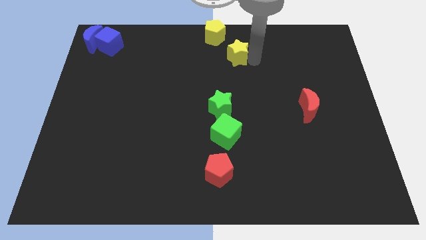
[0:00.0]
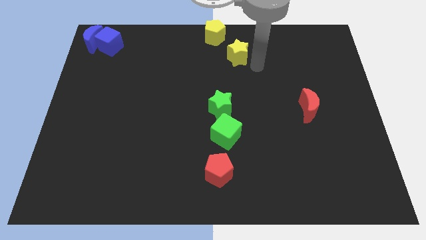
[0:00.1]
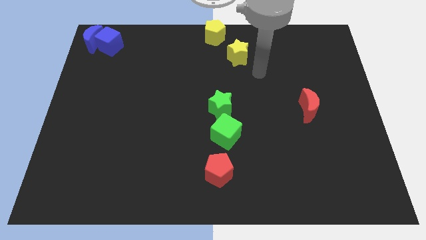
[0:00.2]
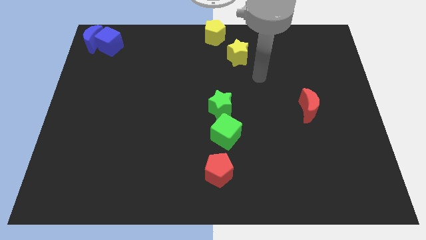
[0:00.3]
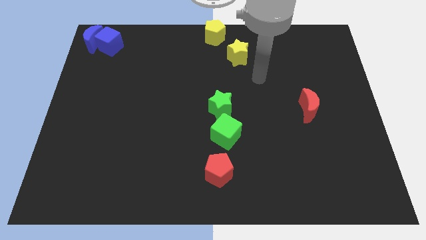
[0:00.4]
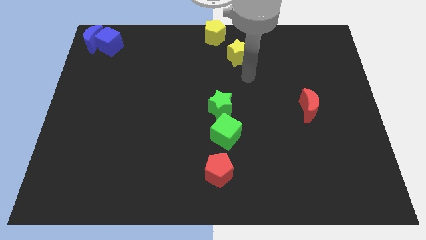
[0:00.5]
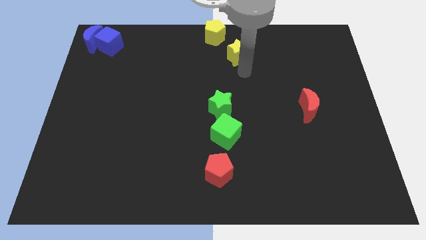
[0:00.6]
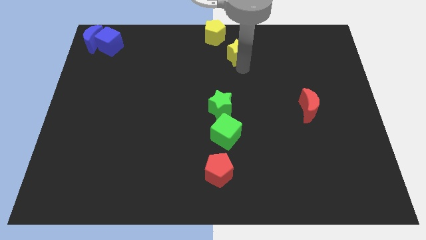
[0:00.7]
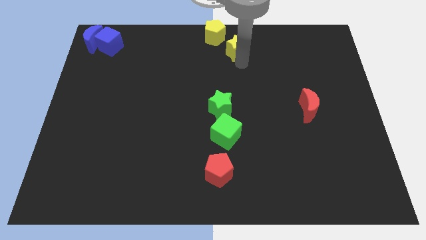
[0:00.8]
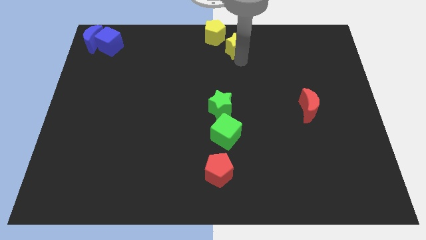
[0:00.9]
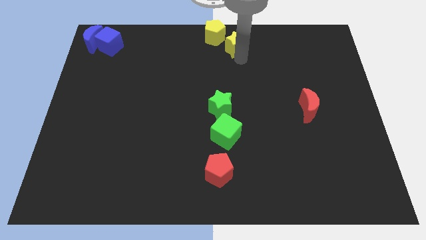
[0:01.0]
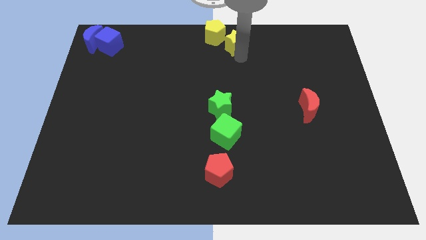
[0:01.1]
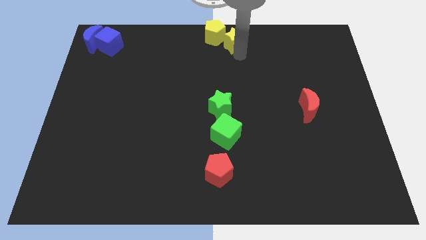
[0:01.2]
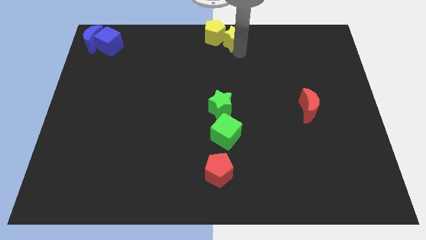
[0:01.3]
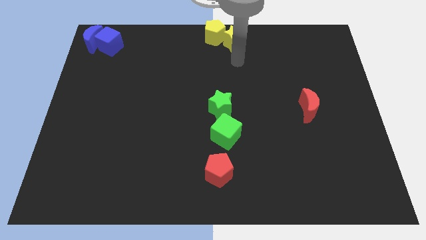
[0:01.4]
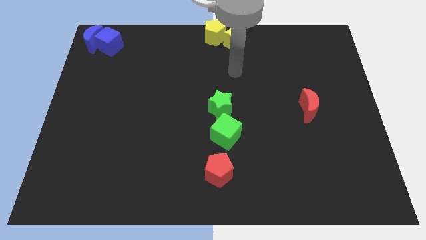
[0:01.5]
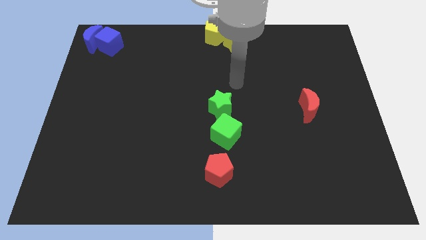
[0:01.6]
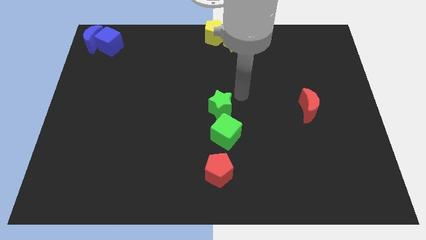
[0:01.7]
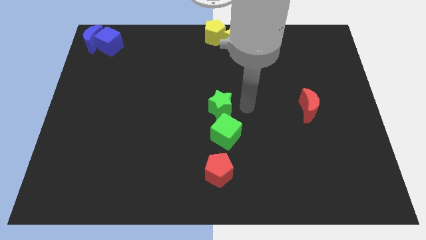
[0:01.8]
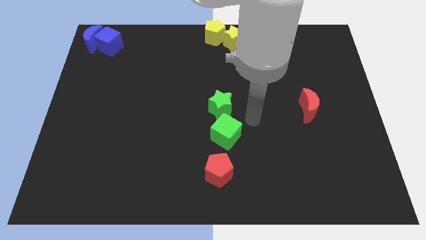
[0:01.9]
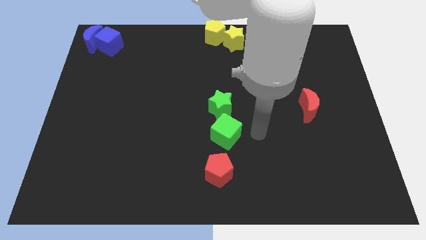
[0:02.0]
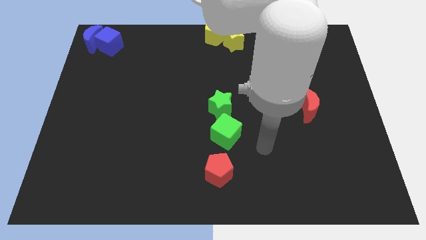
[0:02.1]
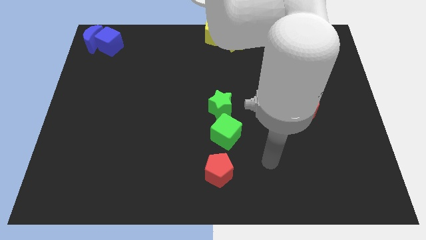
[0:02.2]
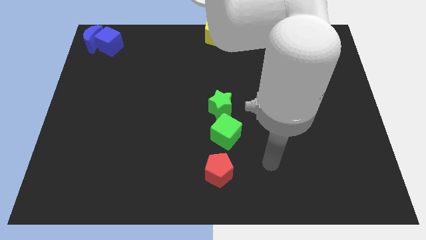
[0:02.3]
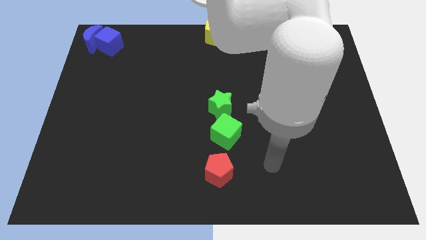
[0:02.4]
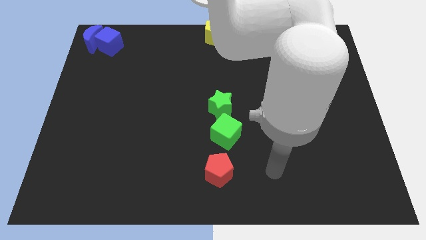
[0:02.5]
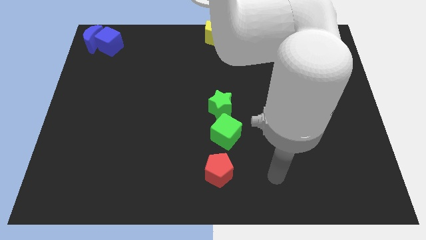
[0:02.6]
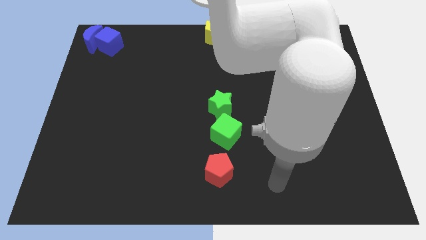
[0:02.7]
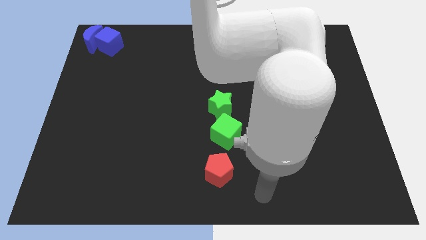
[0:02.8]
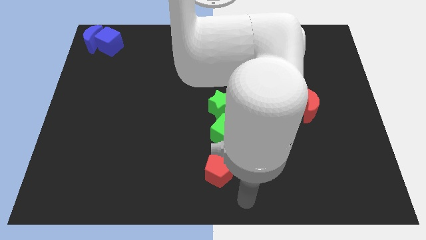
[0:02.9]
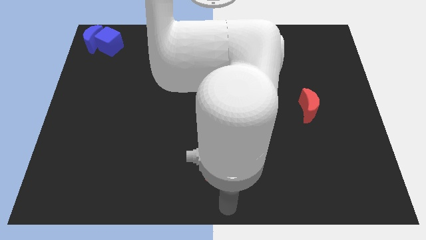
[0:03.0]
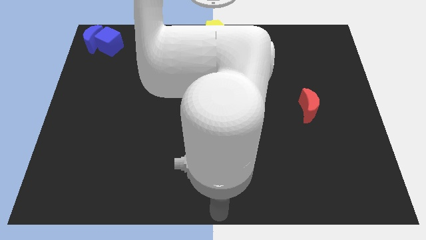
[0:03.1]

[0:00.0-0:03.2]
move yellow star to the right of yellow pentagon

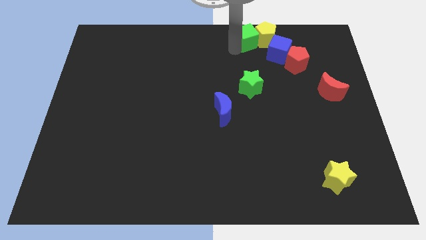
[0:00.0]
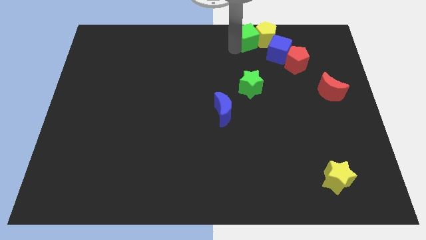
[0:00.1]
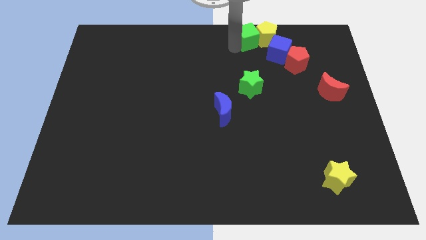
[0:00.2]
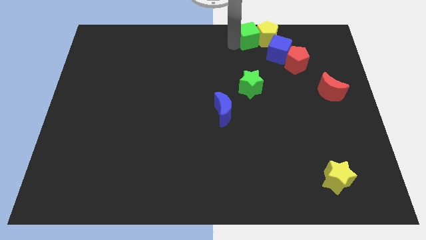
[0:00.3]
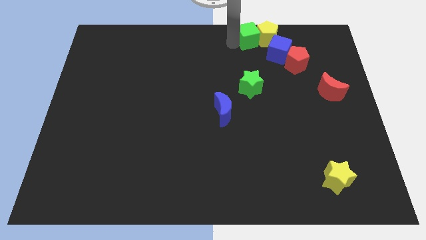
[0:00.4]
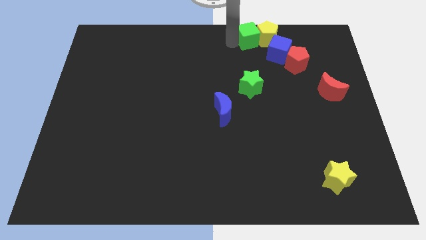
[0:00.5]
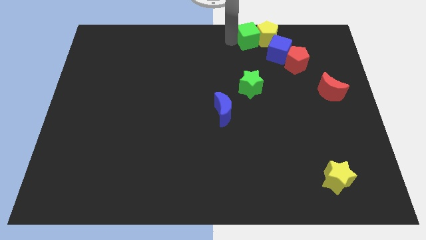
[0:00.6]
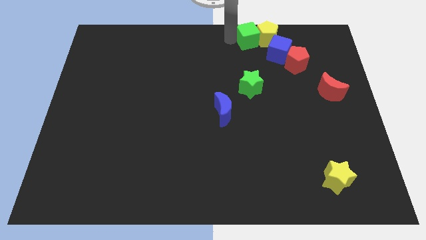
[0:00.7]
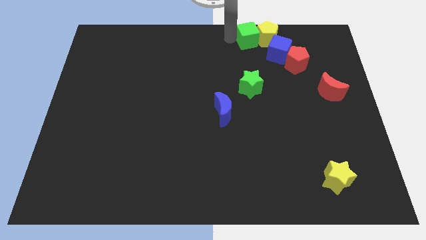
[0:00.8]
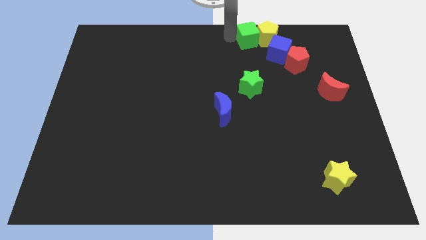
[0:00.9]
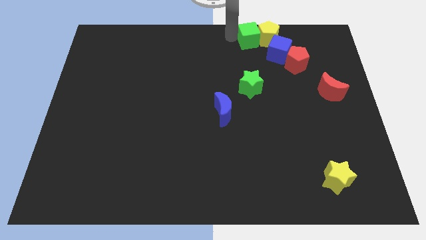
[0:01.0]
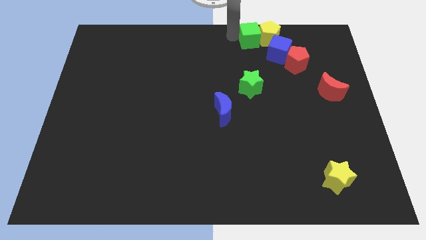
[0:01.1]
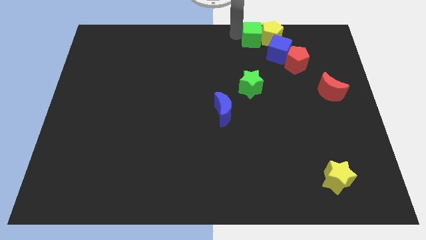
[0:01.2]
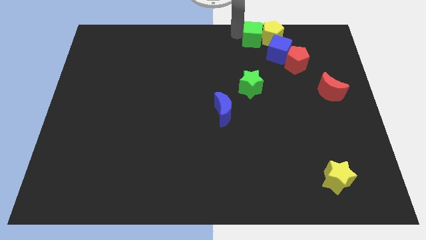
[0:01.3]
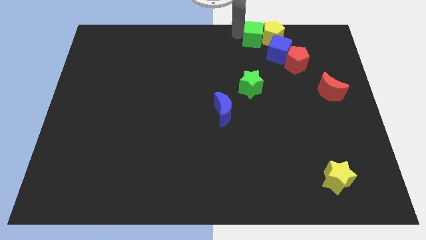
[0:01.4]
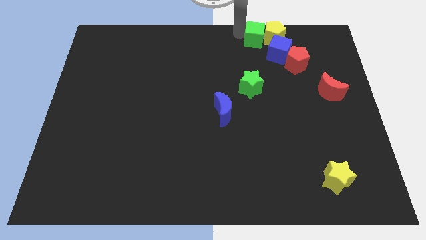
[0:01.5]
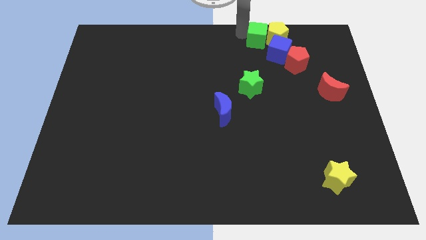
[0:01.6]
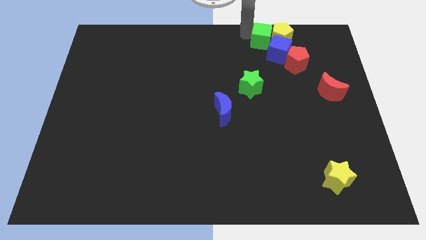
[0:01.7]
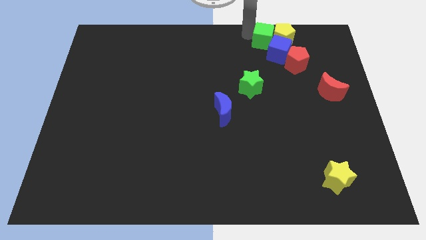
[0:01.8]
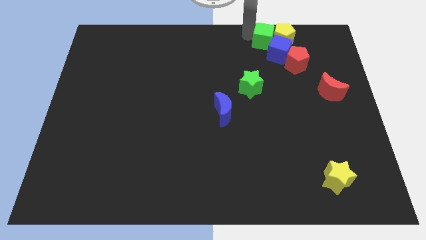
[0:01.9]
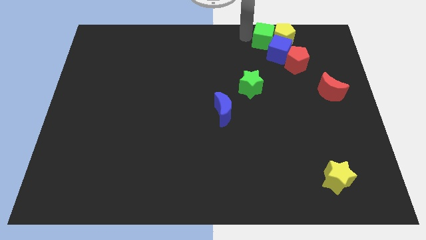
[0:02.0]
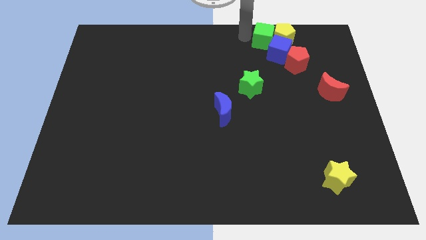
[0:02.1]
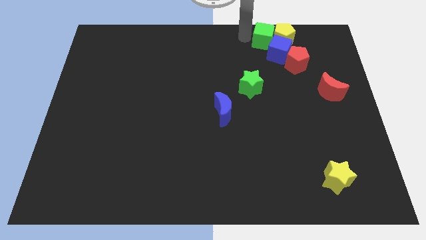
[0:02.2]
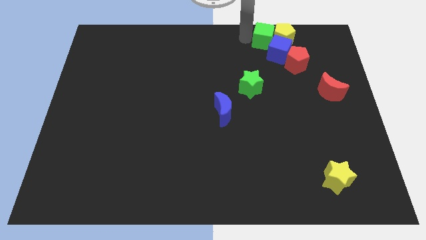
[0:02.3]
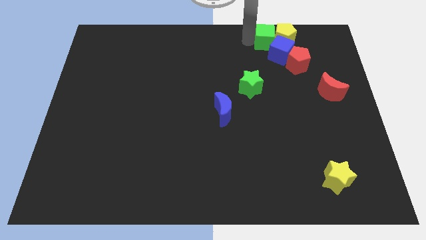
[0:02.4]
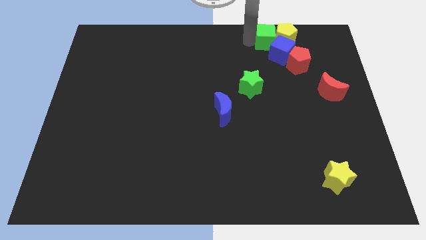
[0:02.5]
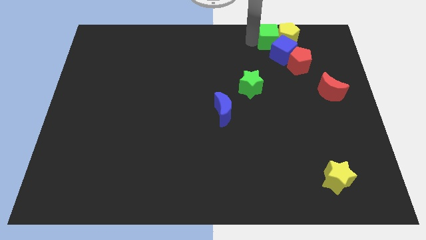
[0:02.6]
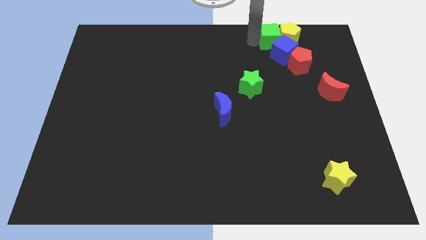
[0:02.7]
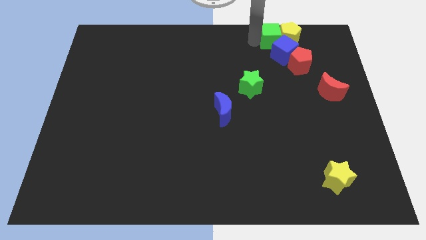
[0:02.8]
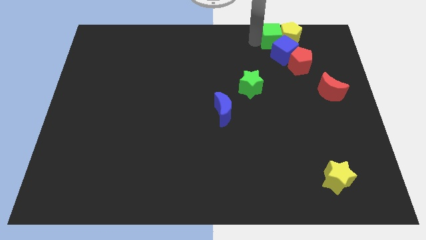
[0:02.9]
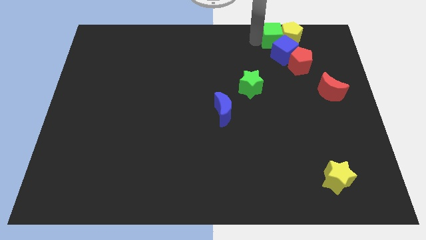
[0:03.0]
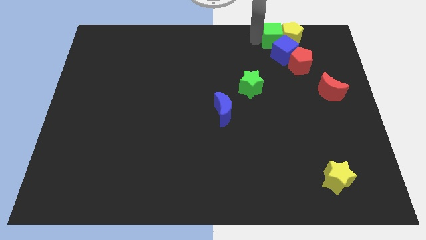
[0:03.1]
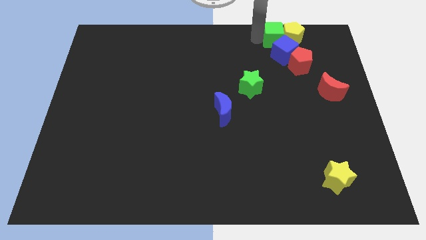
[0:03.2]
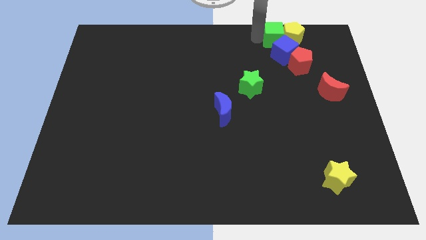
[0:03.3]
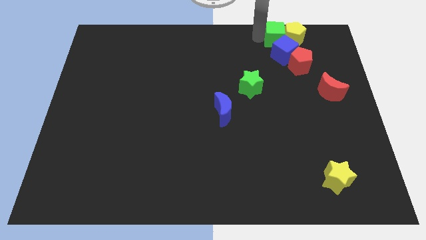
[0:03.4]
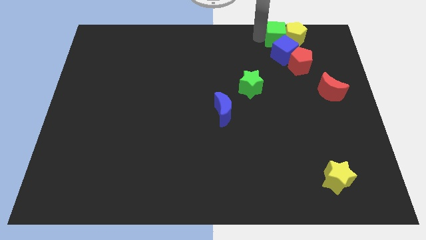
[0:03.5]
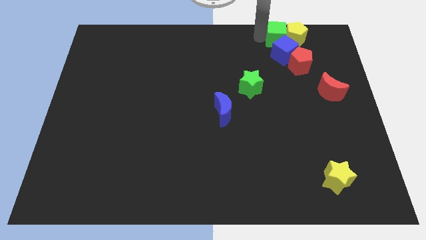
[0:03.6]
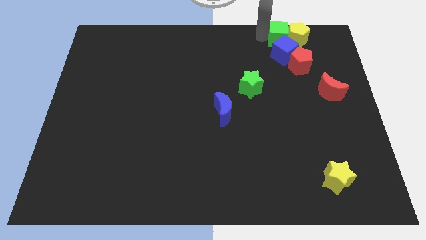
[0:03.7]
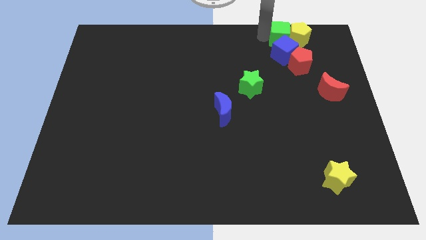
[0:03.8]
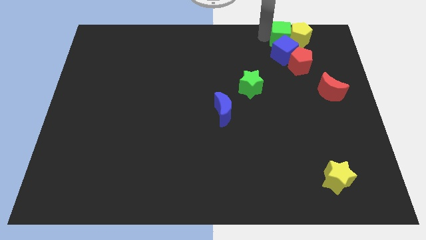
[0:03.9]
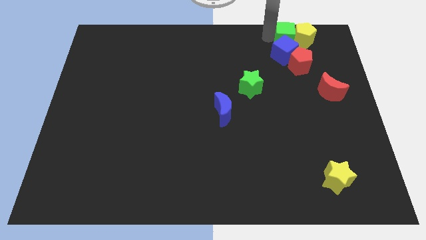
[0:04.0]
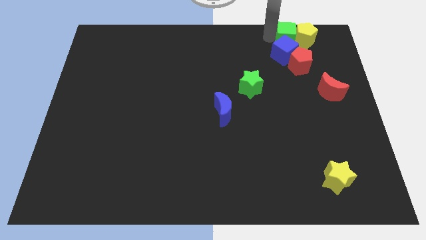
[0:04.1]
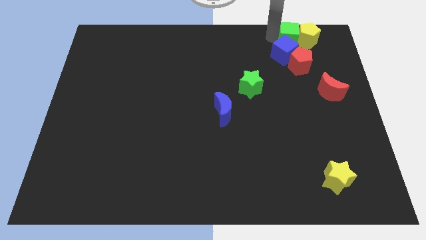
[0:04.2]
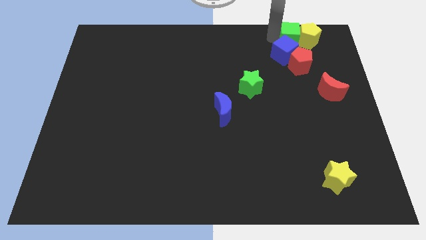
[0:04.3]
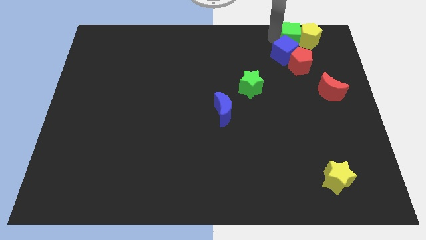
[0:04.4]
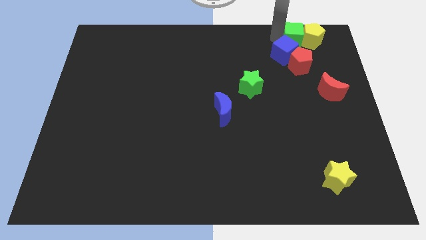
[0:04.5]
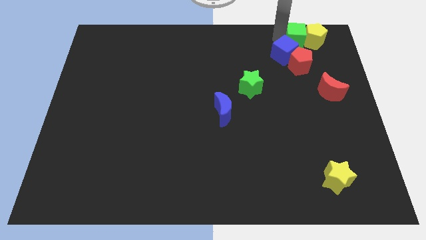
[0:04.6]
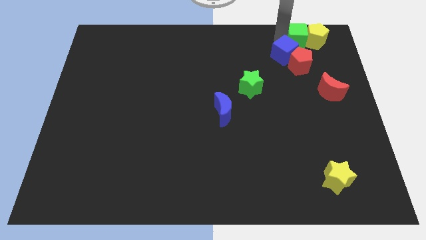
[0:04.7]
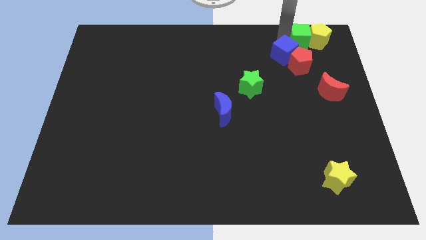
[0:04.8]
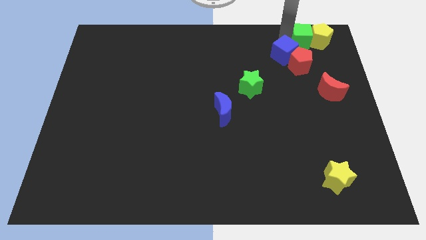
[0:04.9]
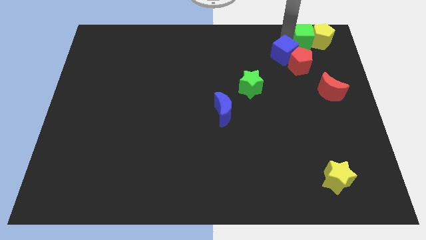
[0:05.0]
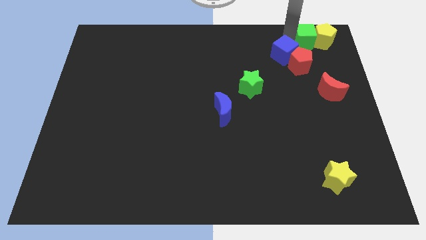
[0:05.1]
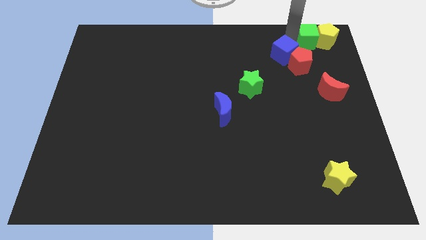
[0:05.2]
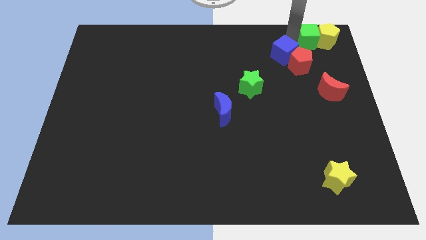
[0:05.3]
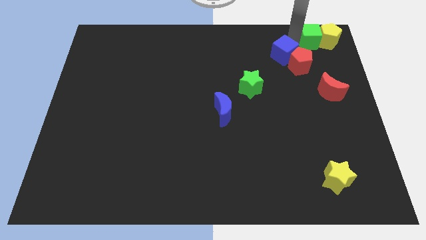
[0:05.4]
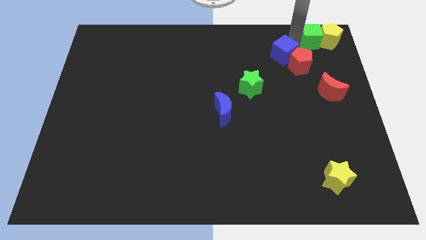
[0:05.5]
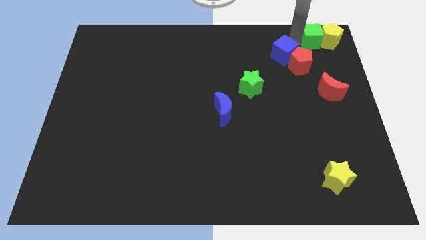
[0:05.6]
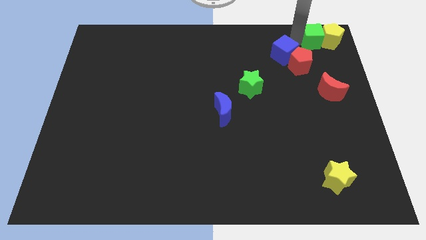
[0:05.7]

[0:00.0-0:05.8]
slide the green cube and yellow pentagon towards the top right of the board

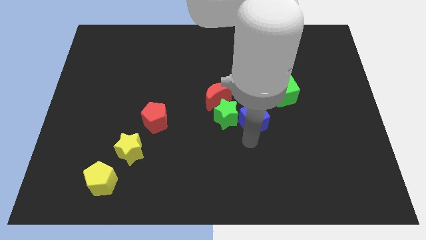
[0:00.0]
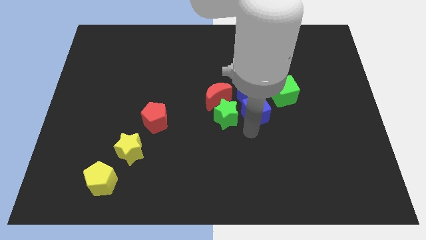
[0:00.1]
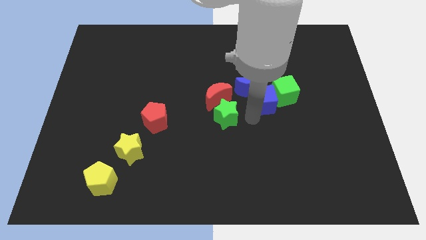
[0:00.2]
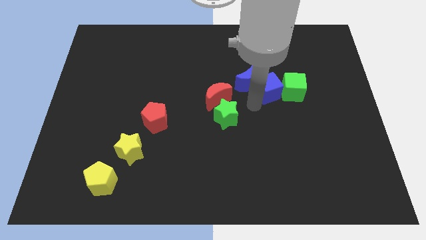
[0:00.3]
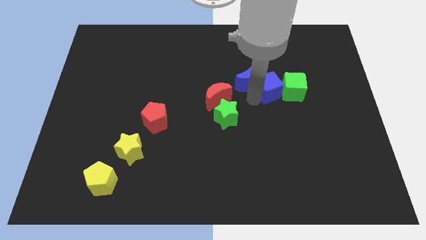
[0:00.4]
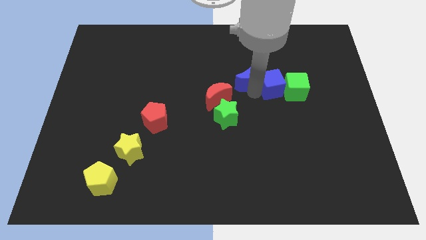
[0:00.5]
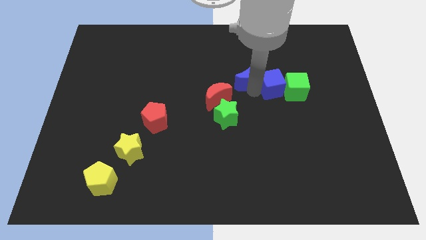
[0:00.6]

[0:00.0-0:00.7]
push blue cube beside green cube
